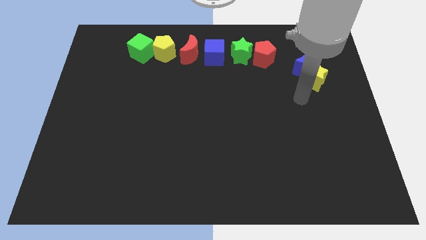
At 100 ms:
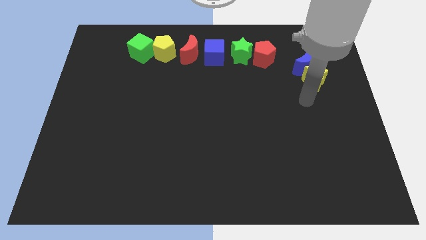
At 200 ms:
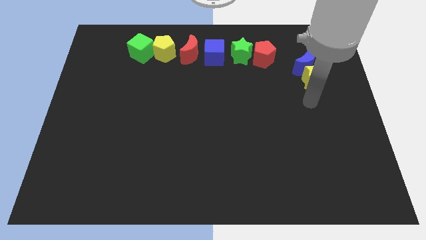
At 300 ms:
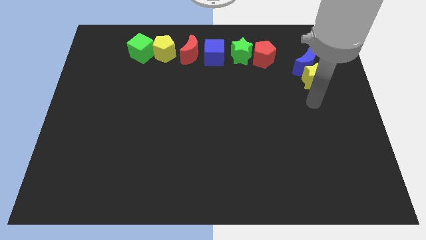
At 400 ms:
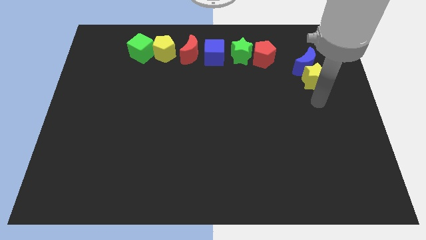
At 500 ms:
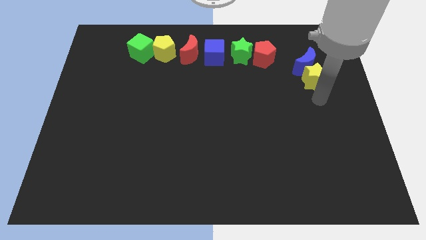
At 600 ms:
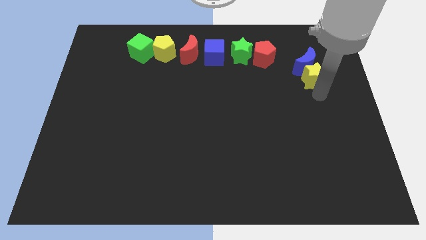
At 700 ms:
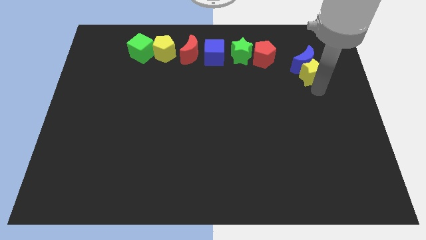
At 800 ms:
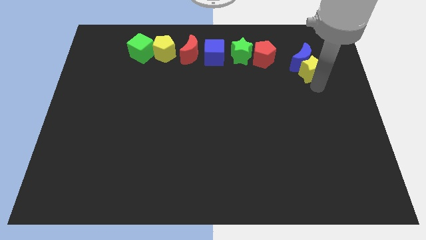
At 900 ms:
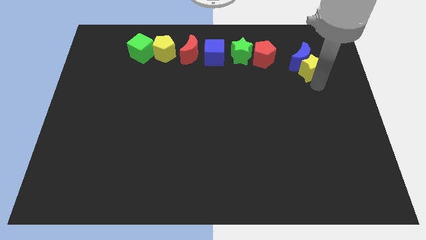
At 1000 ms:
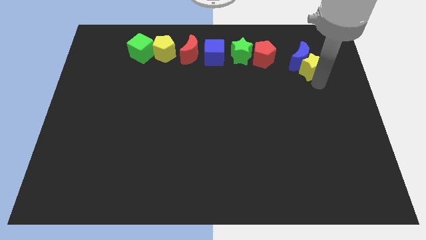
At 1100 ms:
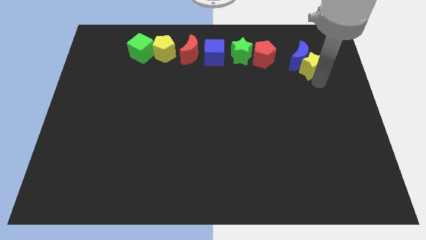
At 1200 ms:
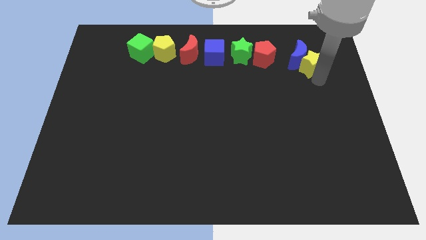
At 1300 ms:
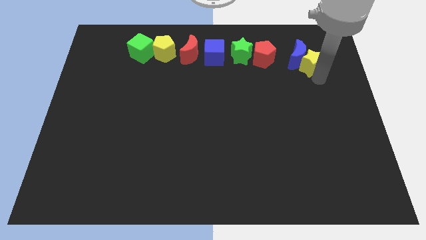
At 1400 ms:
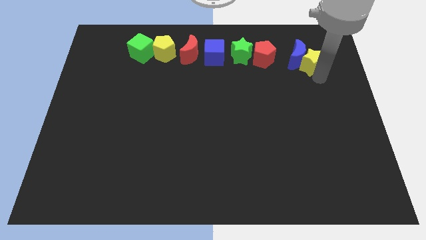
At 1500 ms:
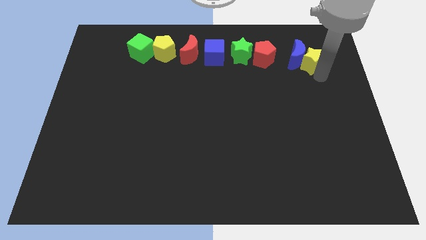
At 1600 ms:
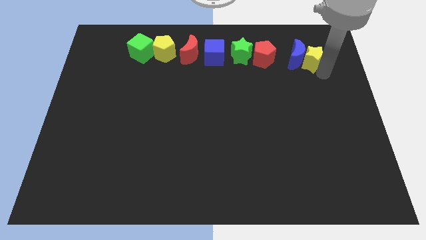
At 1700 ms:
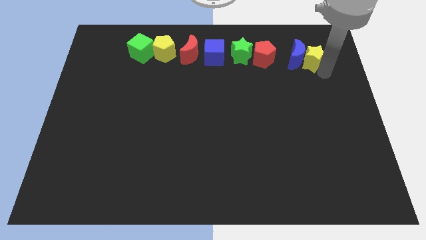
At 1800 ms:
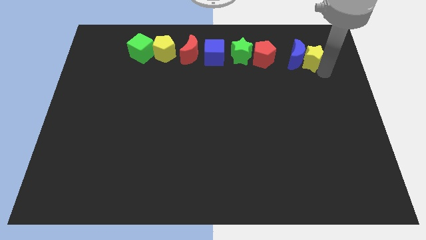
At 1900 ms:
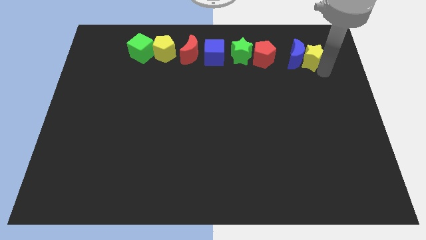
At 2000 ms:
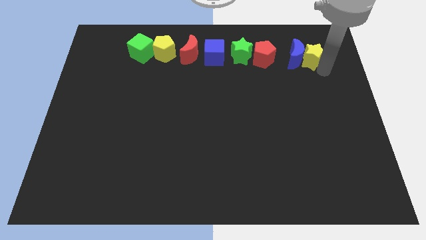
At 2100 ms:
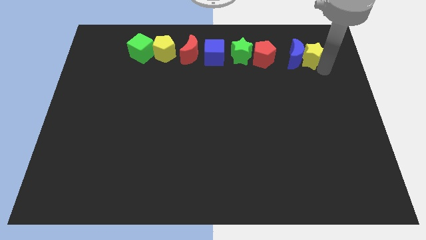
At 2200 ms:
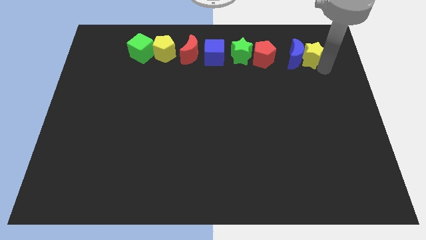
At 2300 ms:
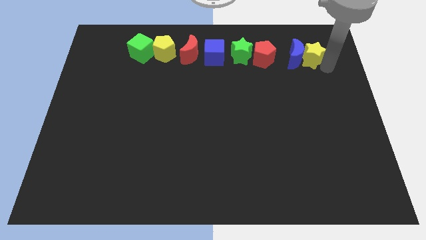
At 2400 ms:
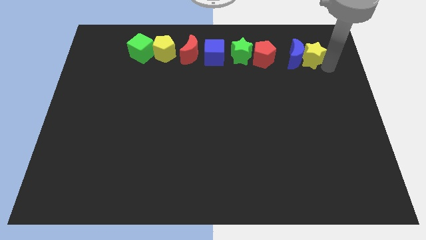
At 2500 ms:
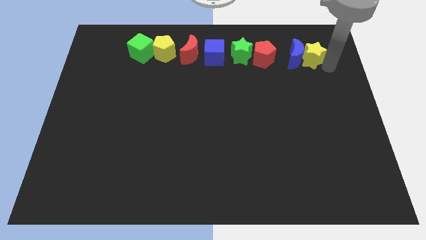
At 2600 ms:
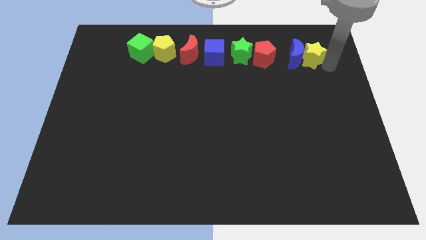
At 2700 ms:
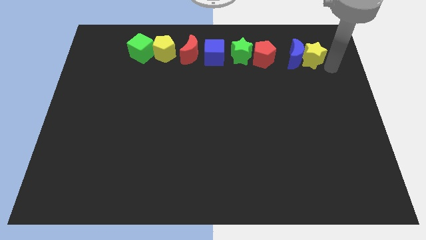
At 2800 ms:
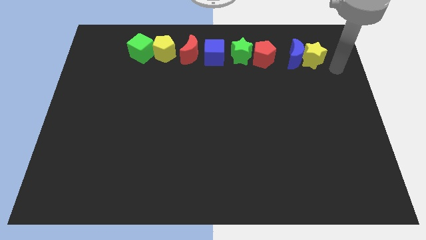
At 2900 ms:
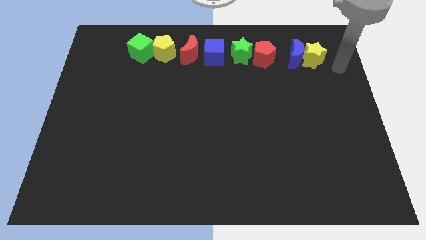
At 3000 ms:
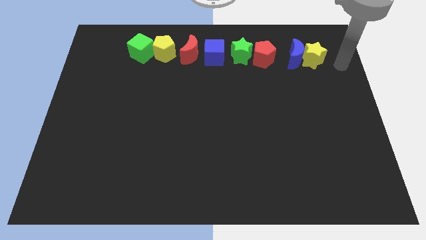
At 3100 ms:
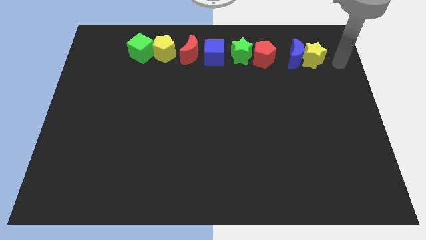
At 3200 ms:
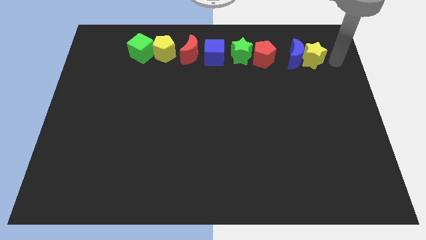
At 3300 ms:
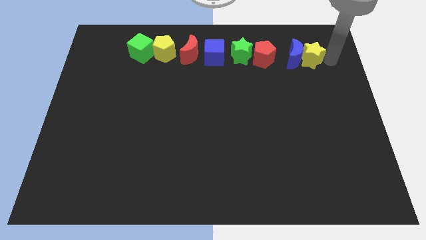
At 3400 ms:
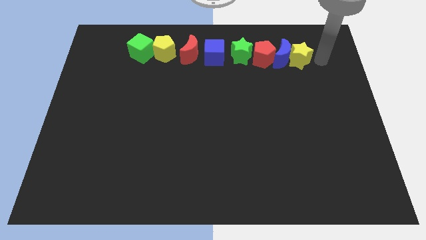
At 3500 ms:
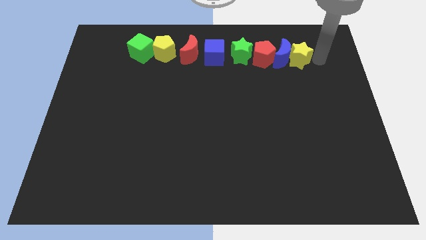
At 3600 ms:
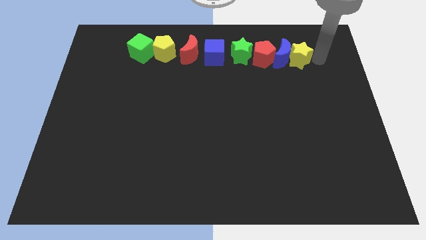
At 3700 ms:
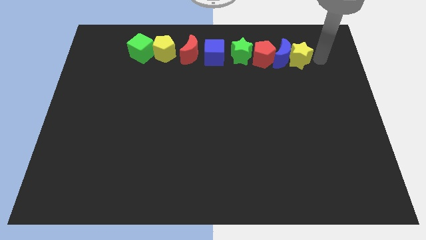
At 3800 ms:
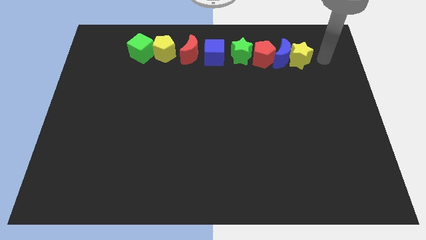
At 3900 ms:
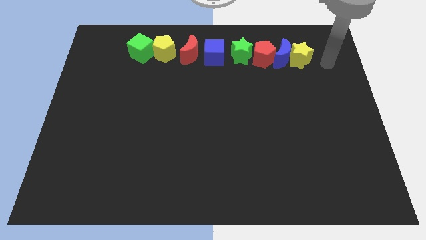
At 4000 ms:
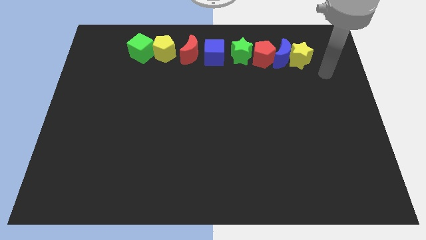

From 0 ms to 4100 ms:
move the yellow star and the blue crescent to the right of the red pentagon

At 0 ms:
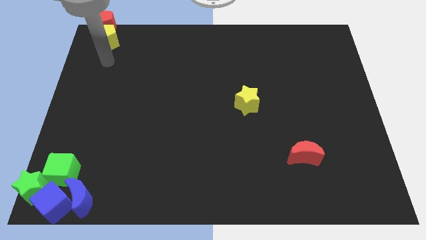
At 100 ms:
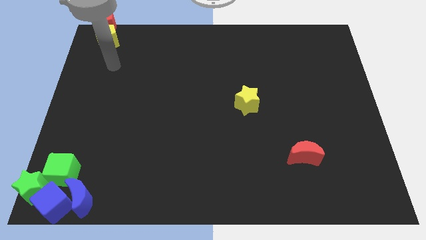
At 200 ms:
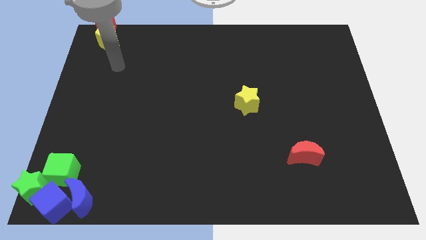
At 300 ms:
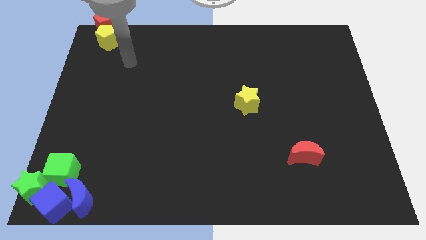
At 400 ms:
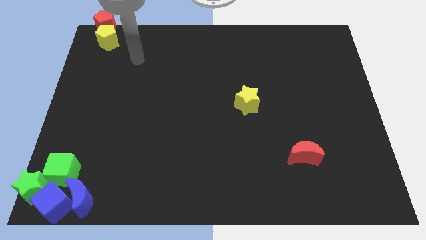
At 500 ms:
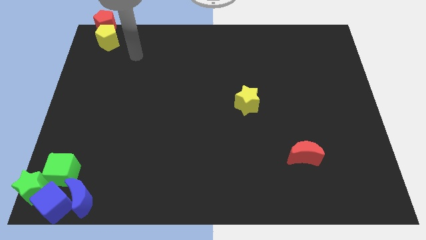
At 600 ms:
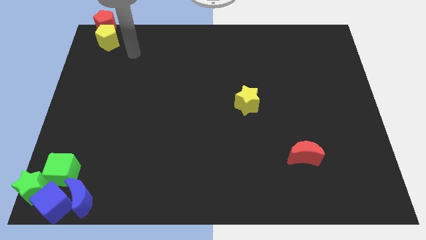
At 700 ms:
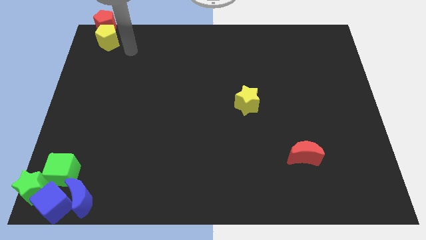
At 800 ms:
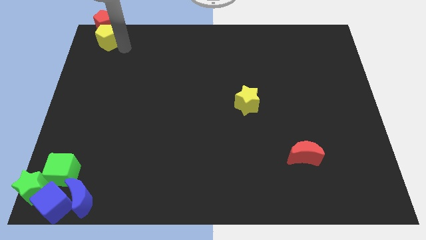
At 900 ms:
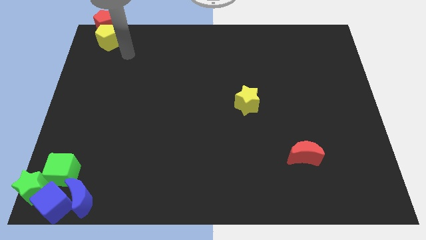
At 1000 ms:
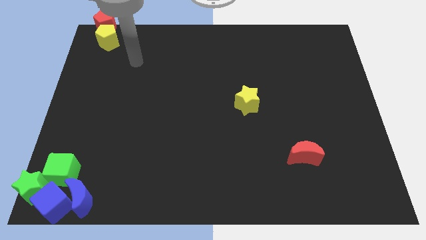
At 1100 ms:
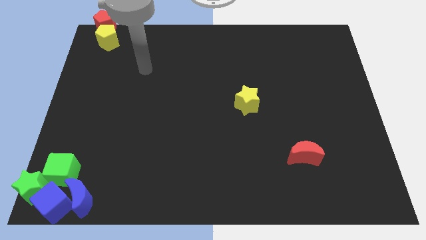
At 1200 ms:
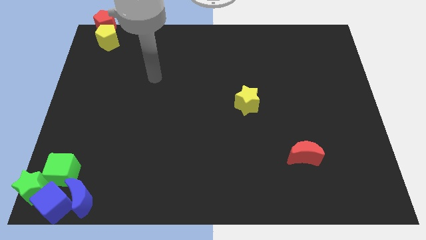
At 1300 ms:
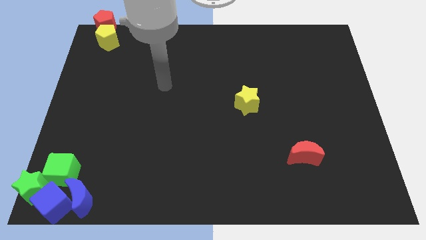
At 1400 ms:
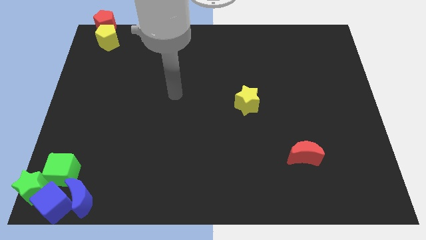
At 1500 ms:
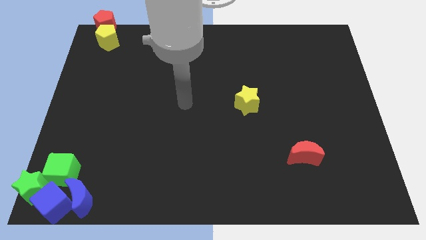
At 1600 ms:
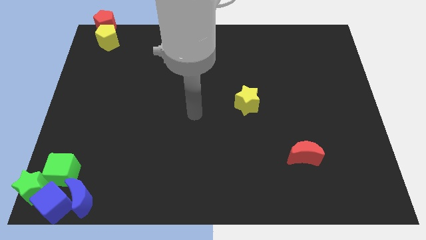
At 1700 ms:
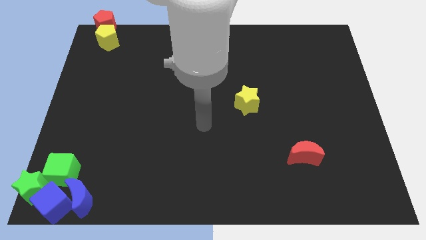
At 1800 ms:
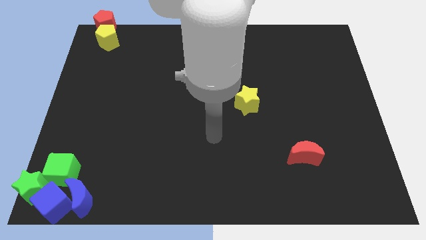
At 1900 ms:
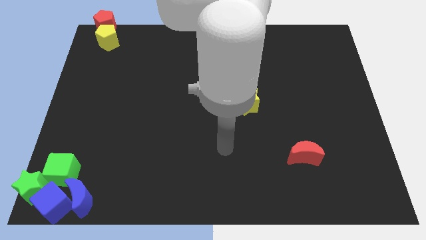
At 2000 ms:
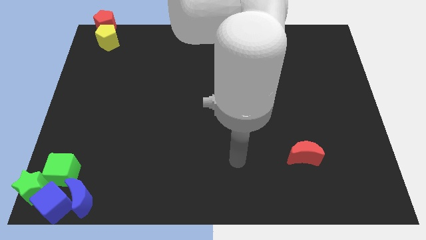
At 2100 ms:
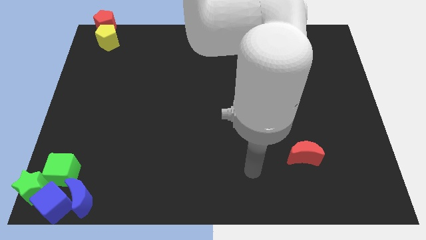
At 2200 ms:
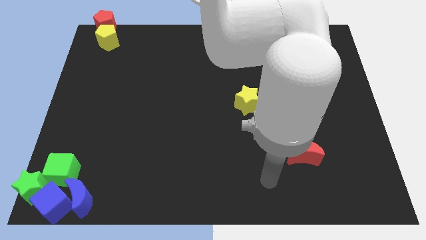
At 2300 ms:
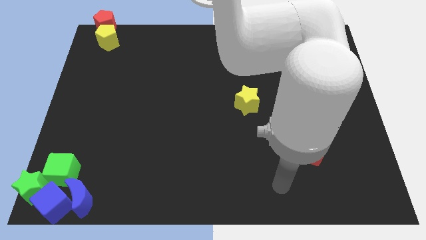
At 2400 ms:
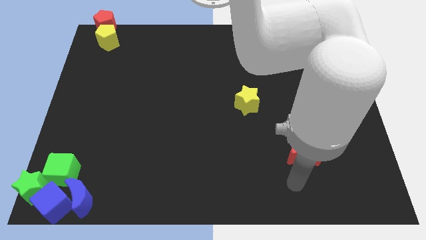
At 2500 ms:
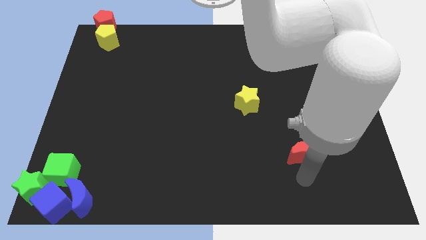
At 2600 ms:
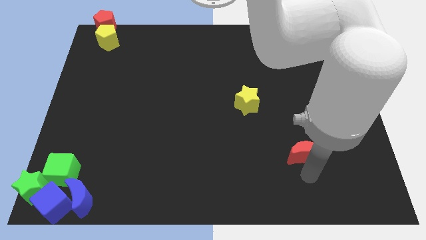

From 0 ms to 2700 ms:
move your arm to the bottom of red crescent

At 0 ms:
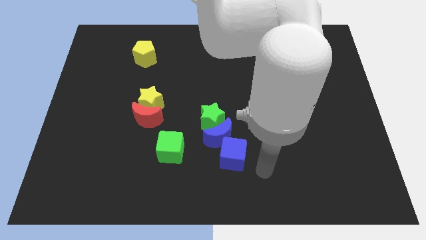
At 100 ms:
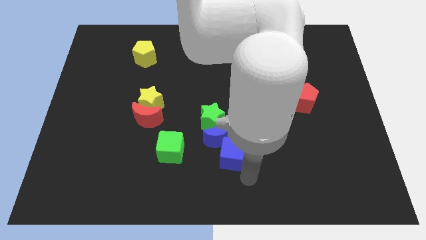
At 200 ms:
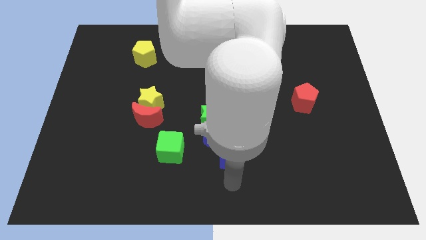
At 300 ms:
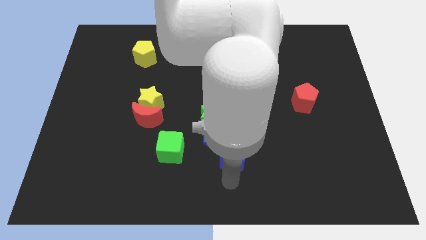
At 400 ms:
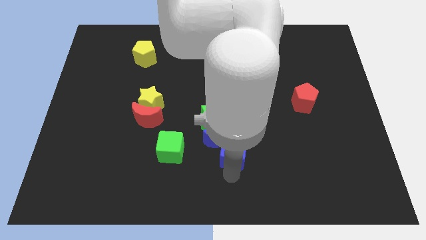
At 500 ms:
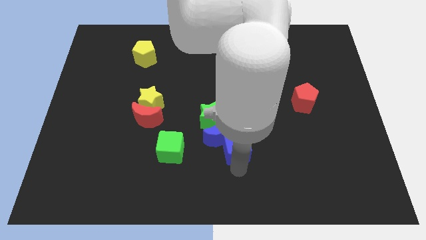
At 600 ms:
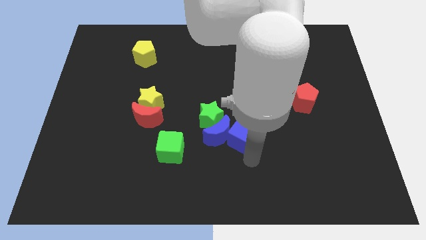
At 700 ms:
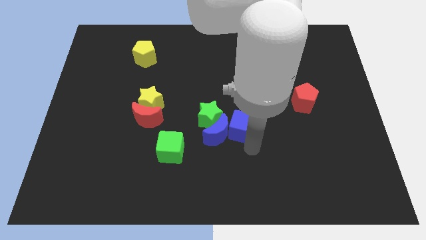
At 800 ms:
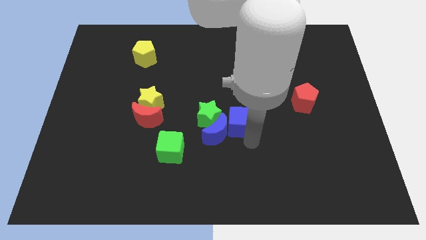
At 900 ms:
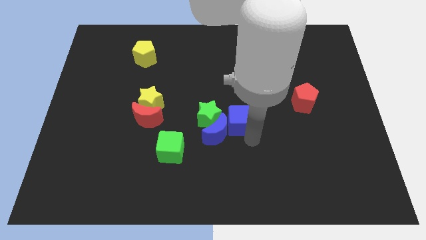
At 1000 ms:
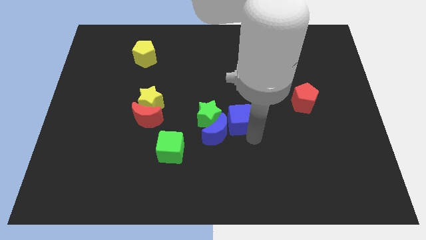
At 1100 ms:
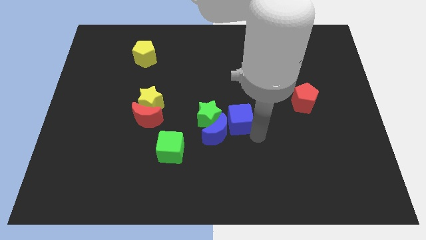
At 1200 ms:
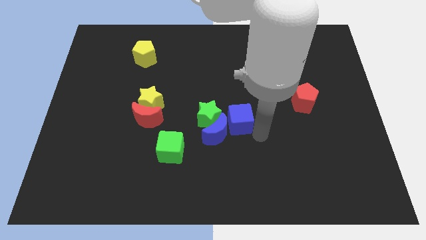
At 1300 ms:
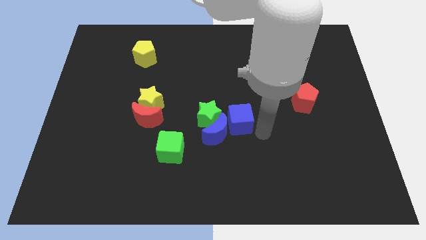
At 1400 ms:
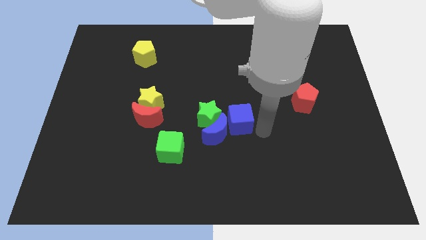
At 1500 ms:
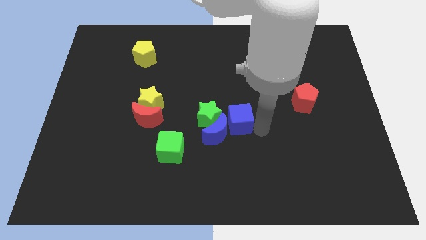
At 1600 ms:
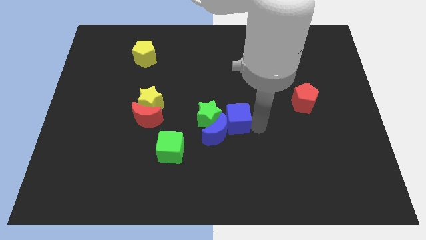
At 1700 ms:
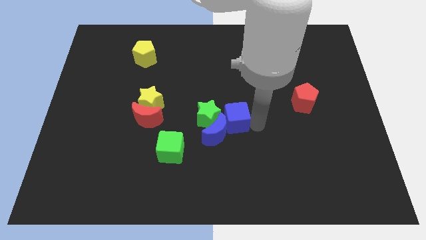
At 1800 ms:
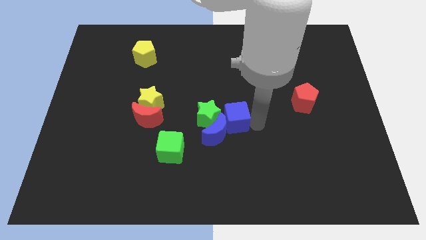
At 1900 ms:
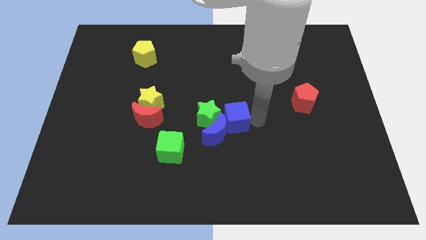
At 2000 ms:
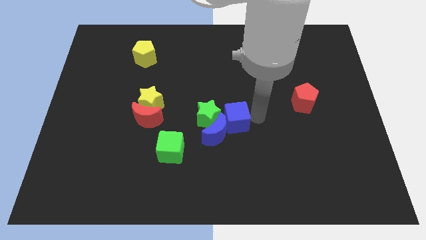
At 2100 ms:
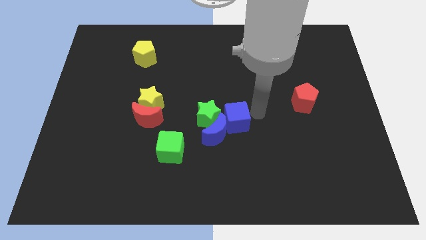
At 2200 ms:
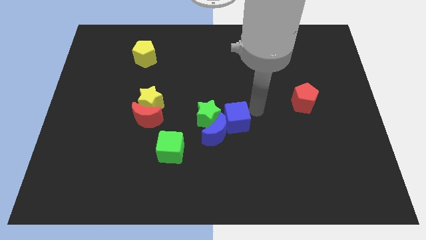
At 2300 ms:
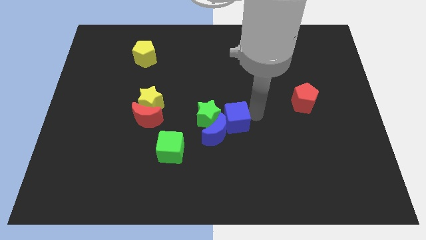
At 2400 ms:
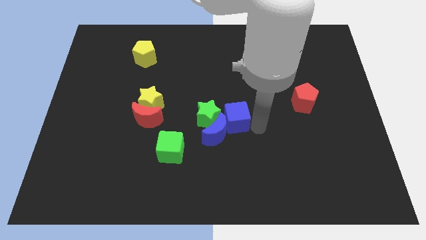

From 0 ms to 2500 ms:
move the blue cube to the right into the blue crescent
